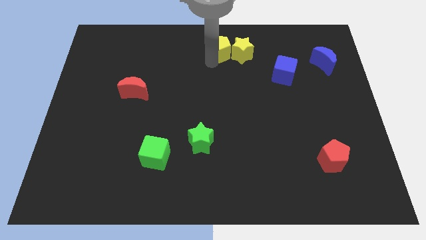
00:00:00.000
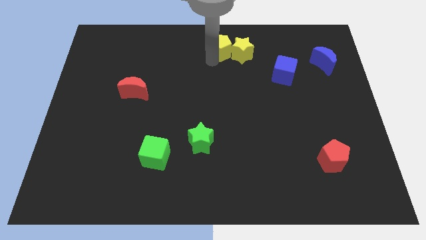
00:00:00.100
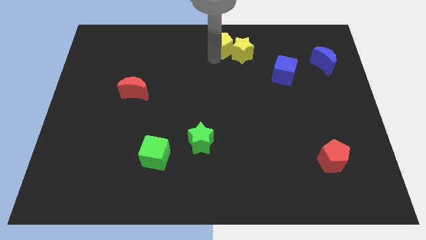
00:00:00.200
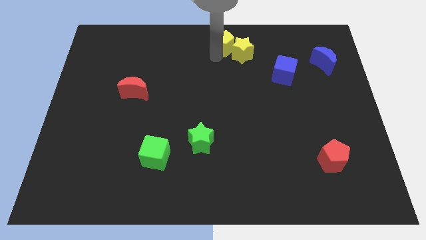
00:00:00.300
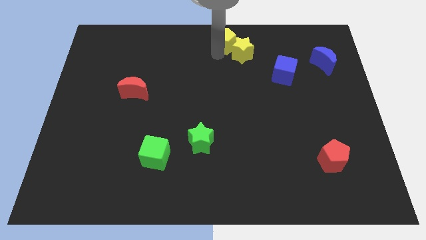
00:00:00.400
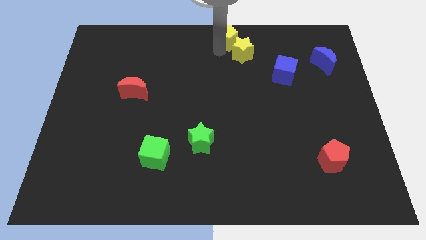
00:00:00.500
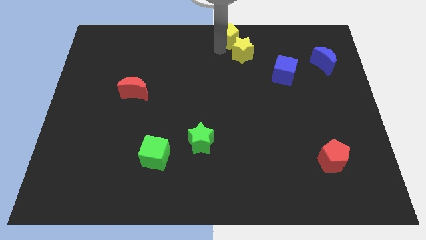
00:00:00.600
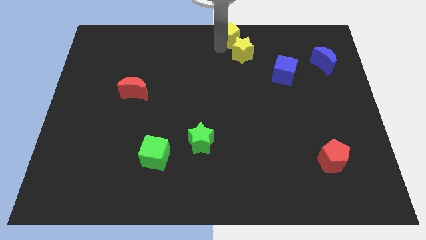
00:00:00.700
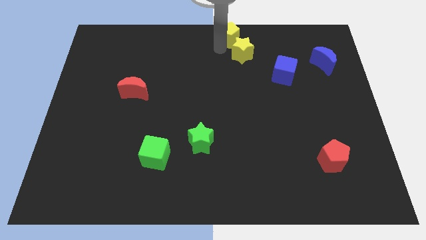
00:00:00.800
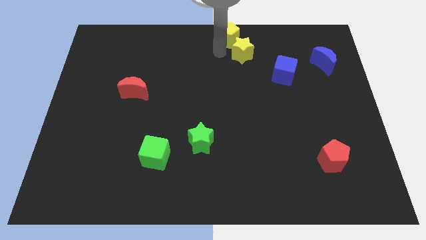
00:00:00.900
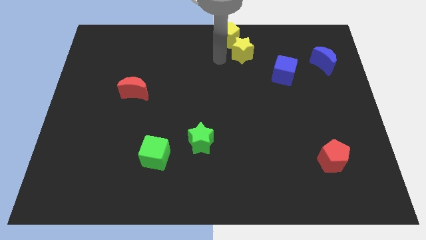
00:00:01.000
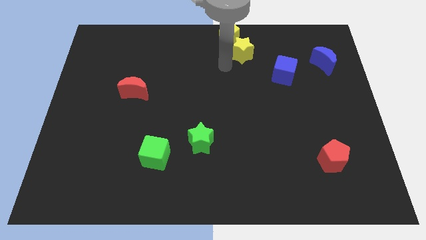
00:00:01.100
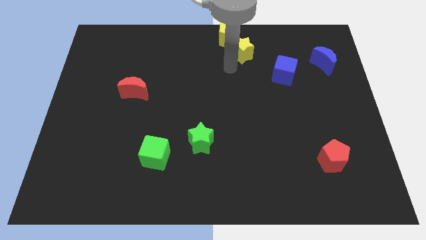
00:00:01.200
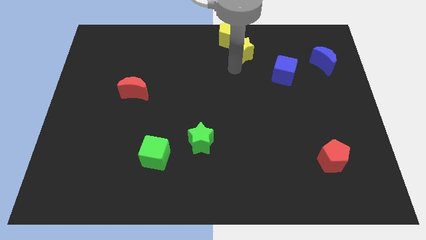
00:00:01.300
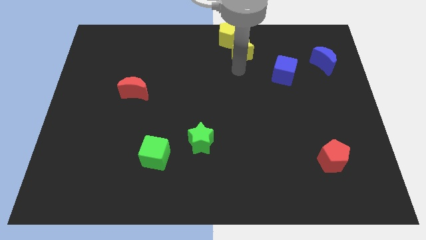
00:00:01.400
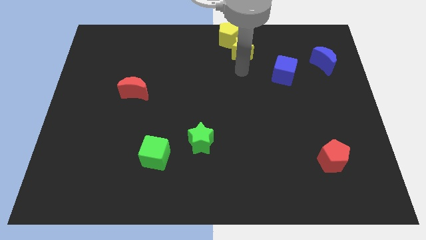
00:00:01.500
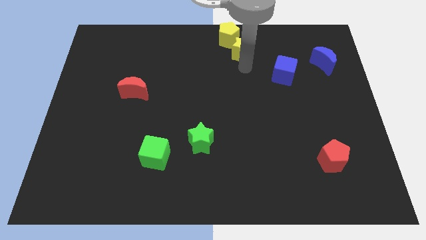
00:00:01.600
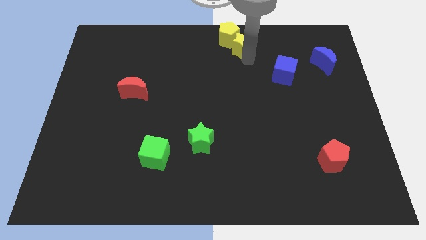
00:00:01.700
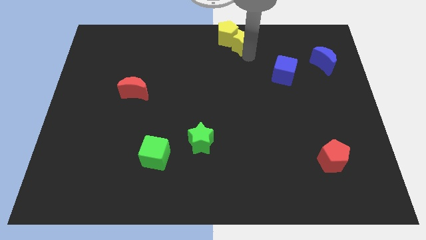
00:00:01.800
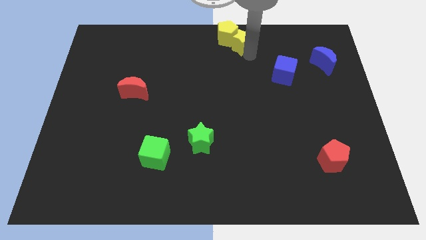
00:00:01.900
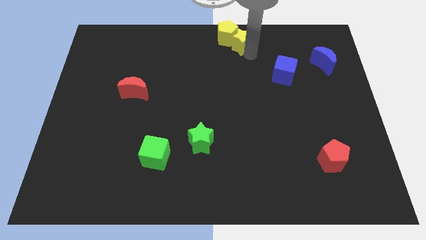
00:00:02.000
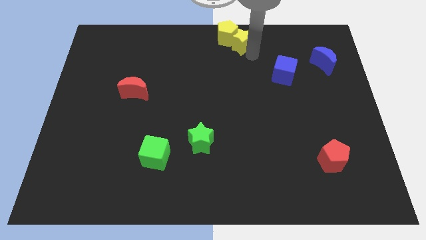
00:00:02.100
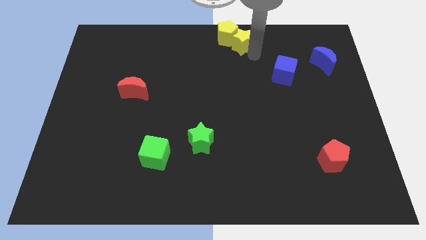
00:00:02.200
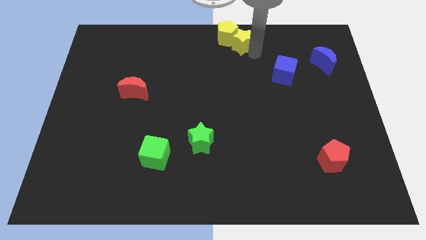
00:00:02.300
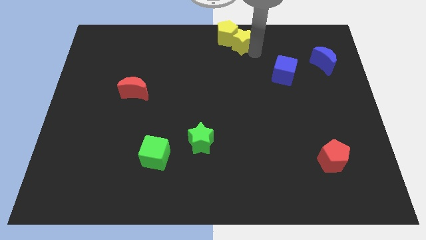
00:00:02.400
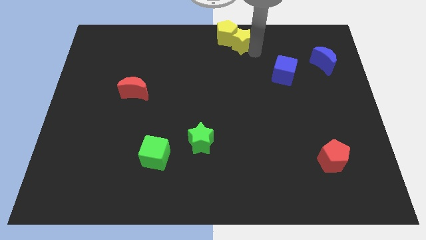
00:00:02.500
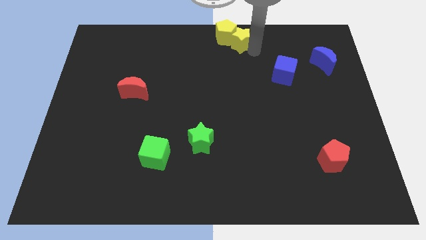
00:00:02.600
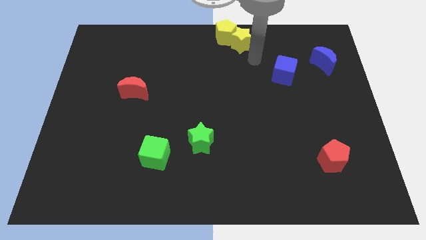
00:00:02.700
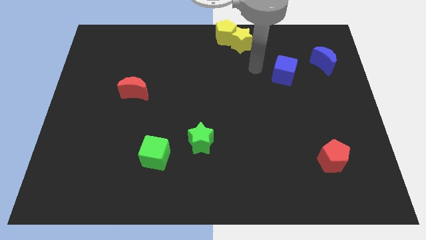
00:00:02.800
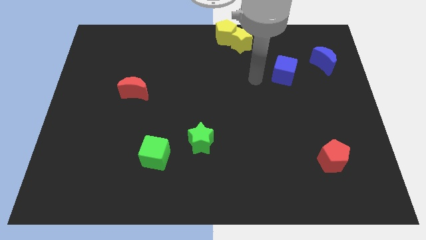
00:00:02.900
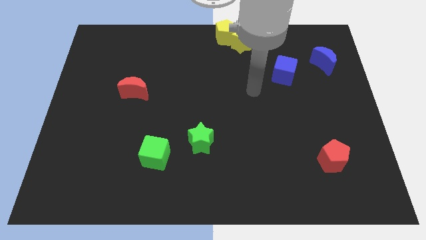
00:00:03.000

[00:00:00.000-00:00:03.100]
place the yellow blocks at the top center of the board

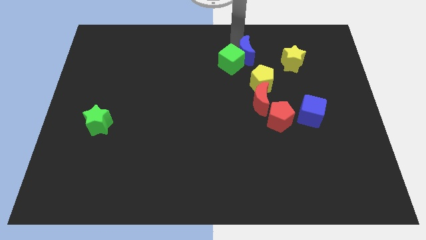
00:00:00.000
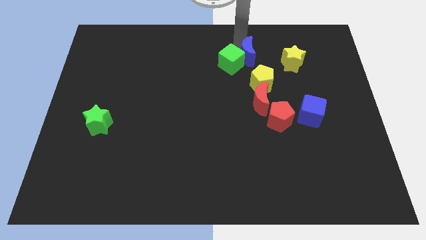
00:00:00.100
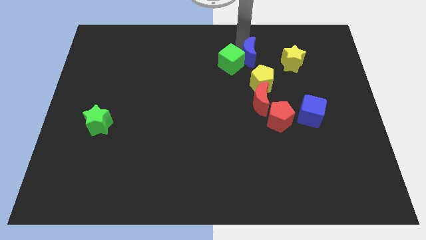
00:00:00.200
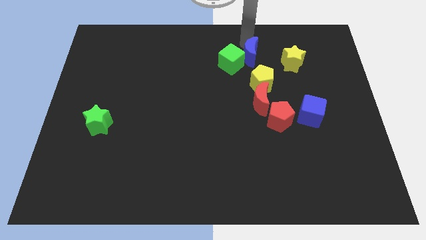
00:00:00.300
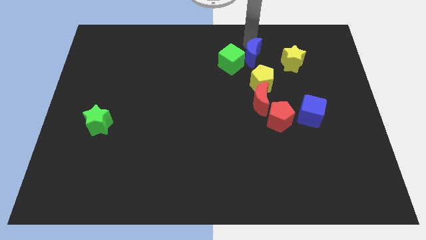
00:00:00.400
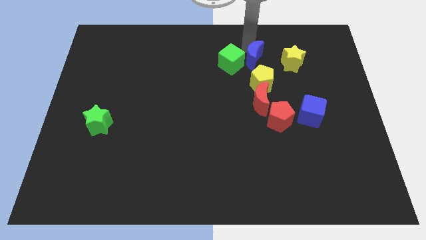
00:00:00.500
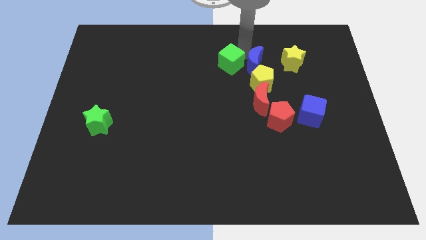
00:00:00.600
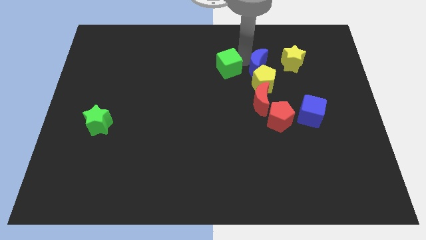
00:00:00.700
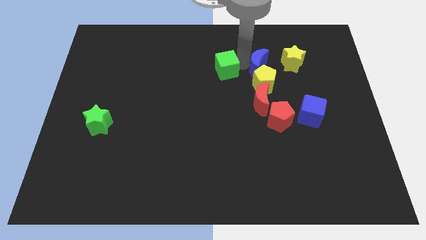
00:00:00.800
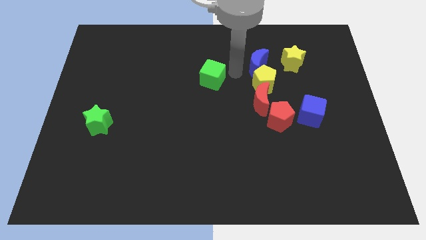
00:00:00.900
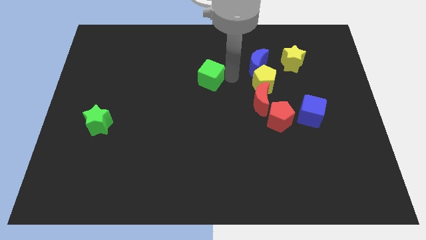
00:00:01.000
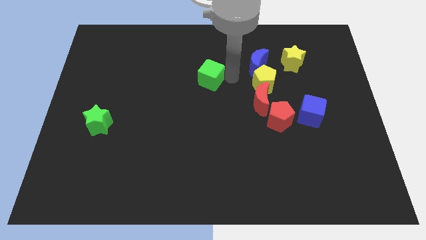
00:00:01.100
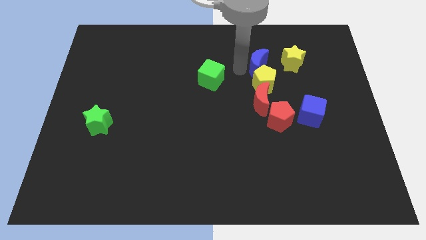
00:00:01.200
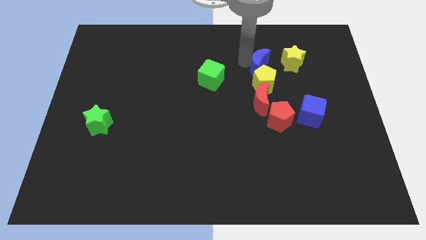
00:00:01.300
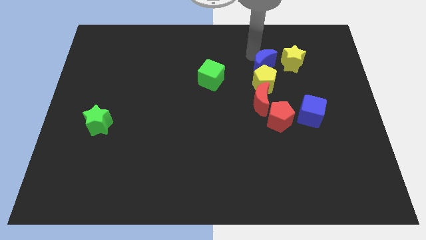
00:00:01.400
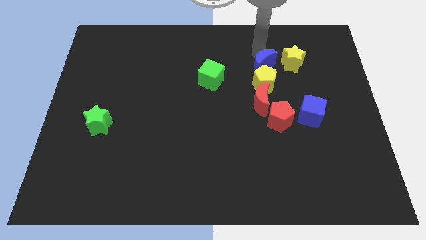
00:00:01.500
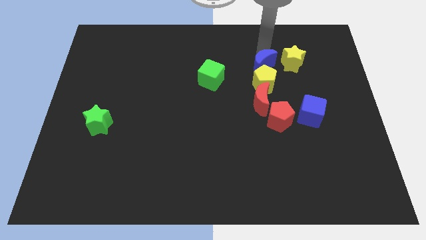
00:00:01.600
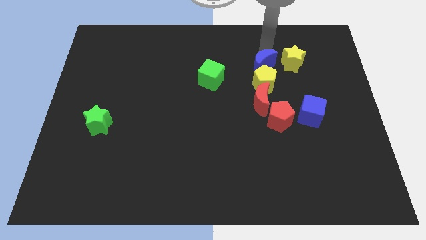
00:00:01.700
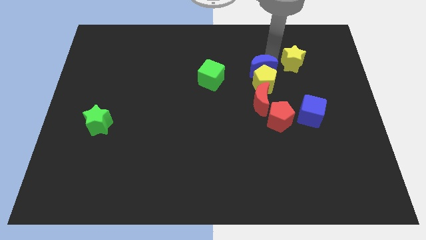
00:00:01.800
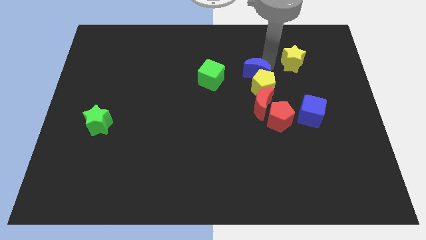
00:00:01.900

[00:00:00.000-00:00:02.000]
separate the green cube from the blue crescent

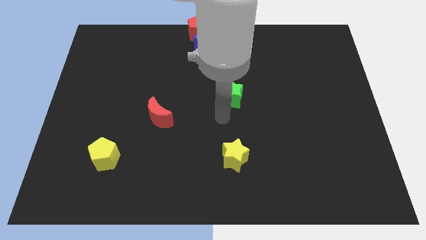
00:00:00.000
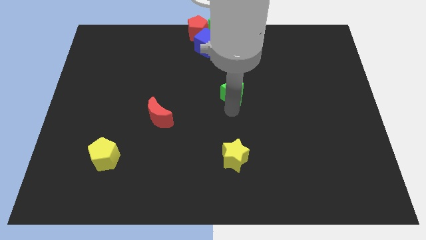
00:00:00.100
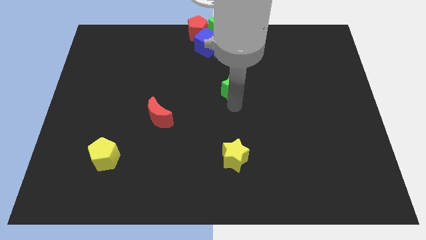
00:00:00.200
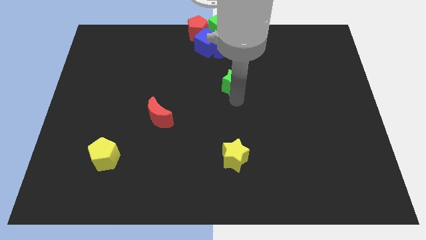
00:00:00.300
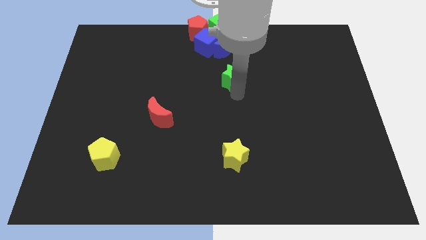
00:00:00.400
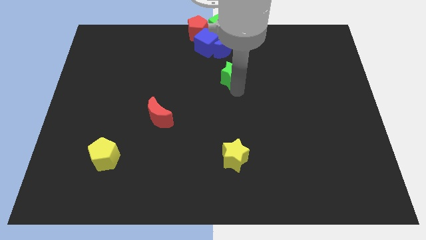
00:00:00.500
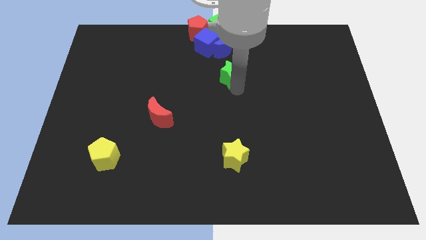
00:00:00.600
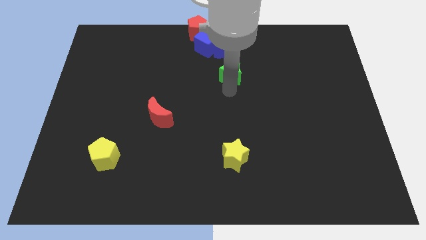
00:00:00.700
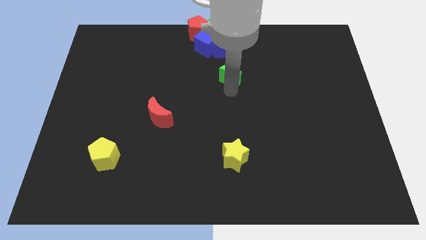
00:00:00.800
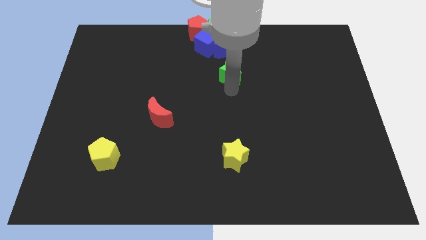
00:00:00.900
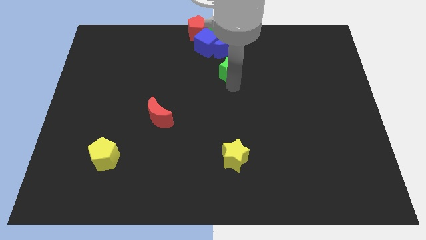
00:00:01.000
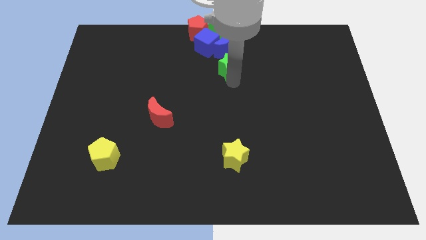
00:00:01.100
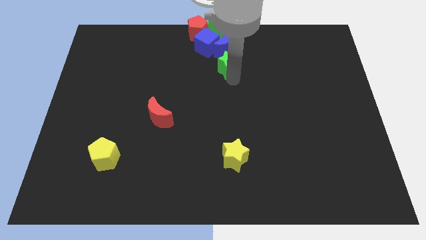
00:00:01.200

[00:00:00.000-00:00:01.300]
slide the green star towards the blue crescent

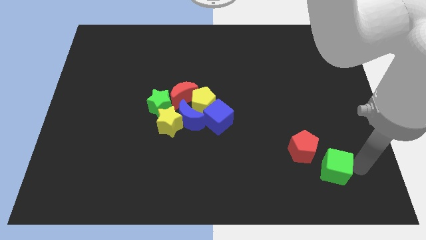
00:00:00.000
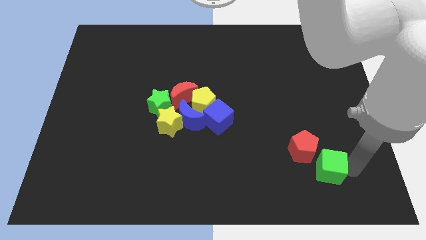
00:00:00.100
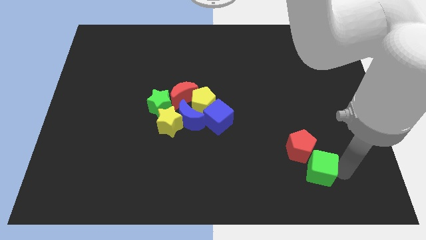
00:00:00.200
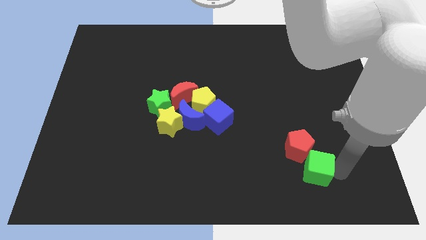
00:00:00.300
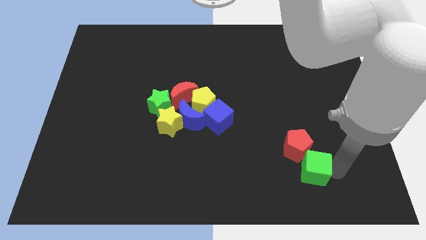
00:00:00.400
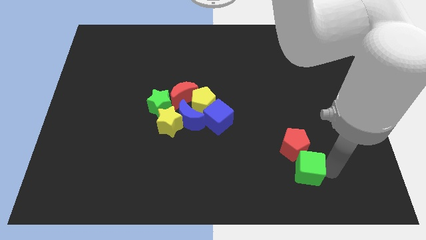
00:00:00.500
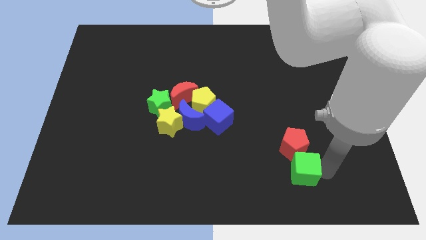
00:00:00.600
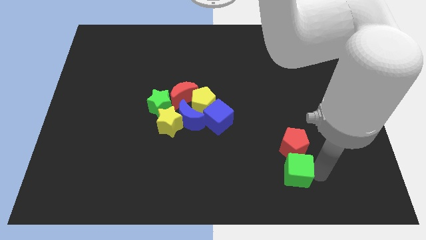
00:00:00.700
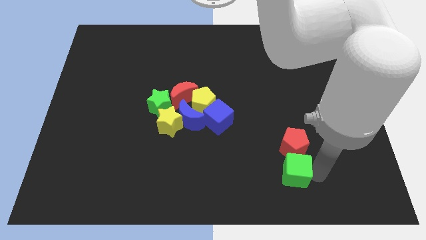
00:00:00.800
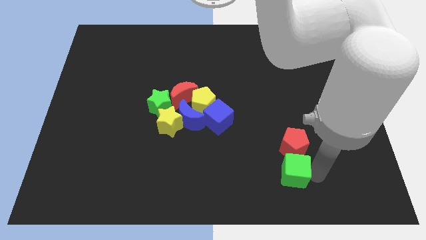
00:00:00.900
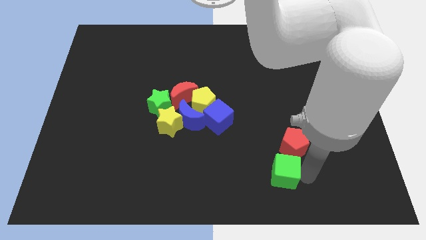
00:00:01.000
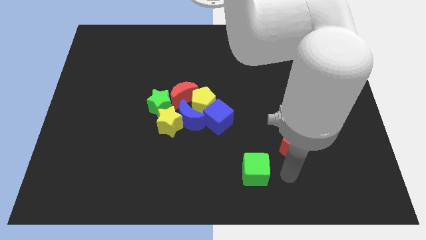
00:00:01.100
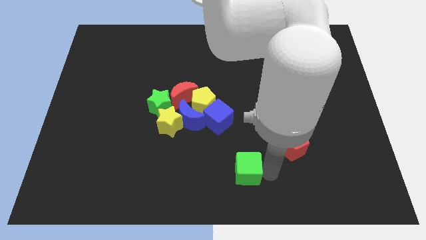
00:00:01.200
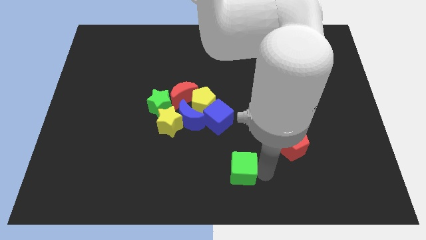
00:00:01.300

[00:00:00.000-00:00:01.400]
slide the green cube slightly to the left

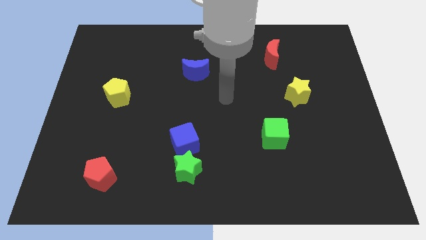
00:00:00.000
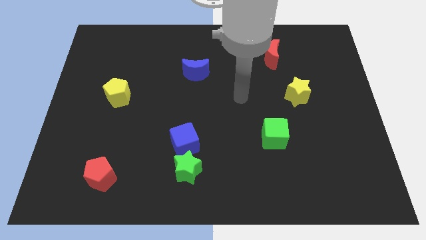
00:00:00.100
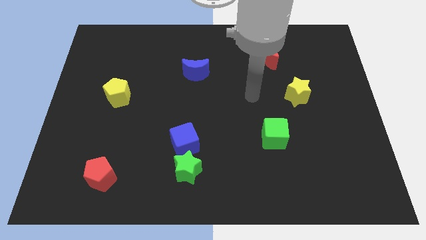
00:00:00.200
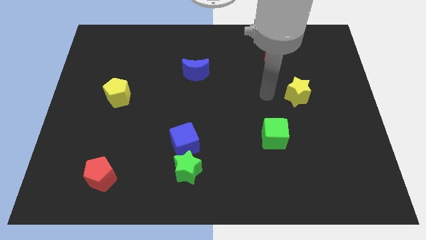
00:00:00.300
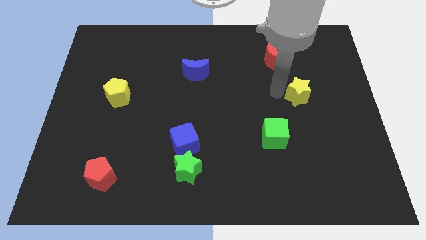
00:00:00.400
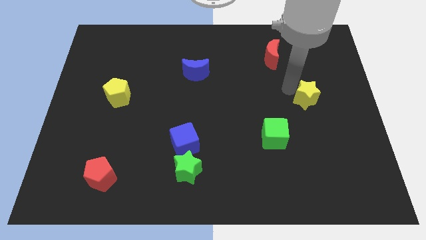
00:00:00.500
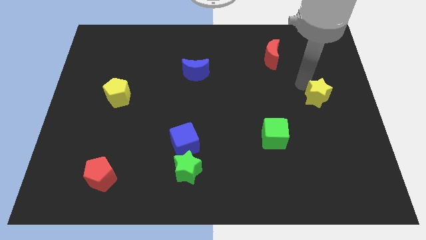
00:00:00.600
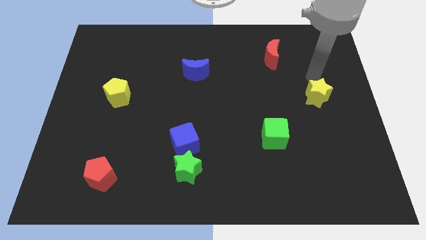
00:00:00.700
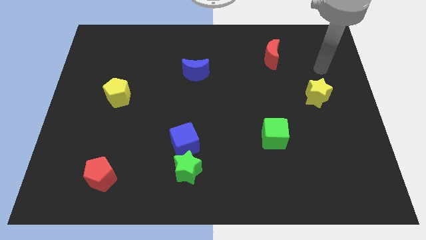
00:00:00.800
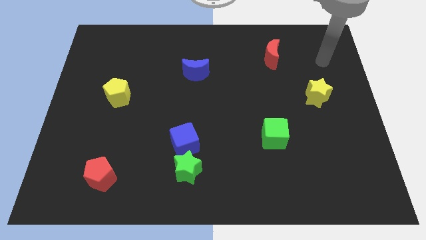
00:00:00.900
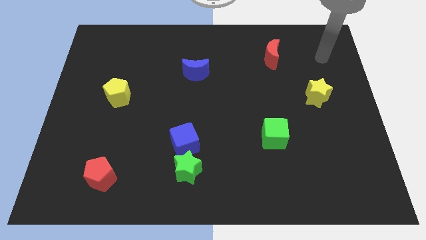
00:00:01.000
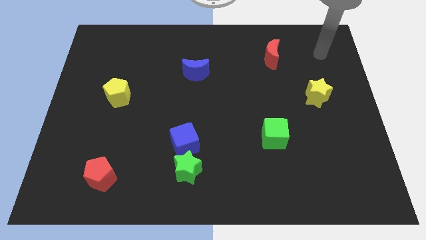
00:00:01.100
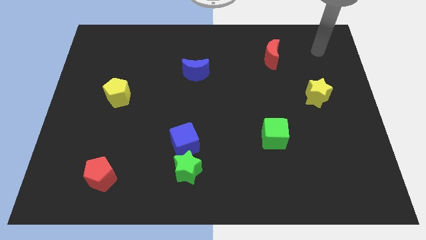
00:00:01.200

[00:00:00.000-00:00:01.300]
move the yellow star diagonally bottom right to the red moon
